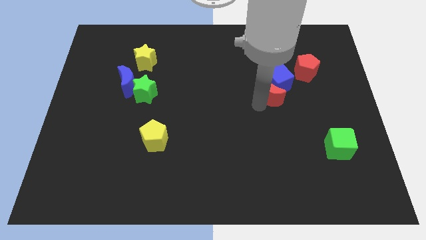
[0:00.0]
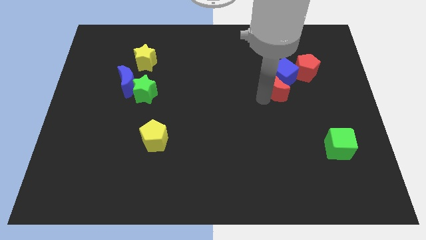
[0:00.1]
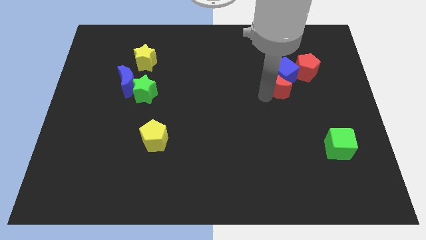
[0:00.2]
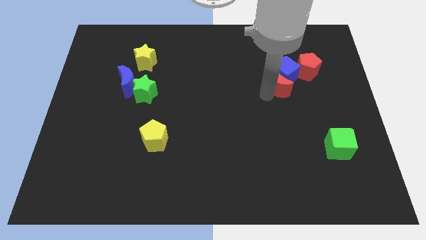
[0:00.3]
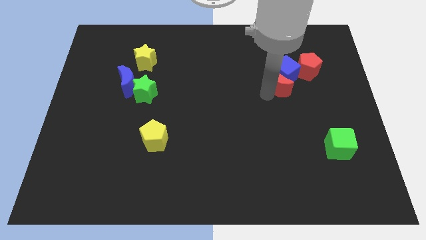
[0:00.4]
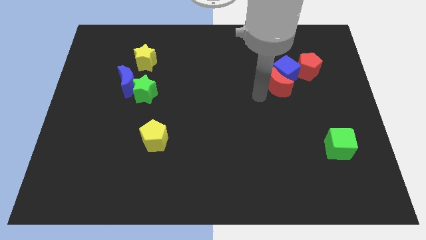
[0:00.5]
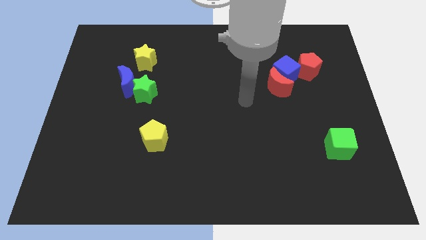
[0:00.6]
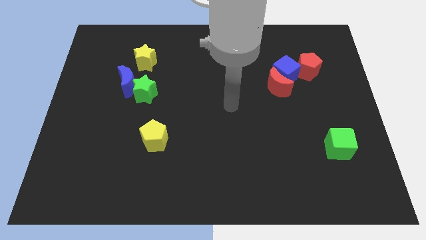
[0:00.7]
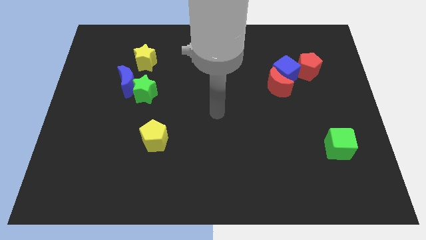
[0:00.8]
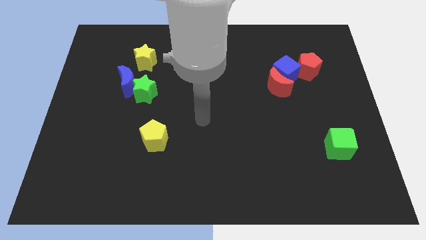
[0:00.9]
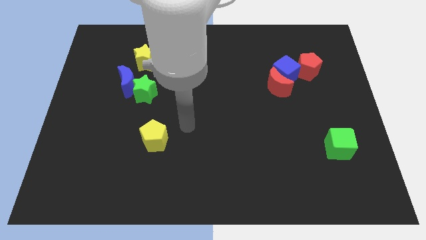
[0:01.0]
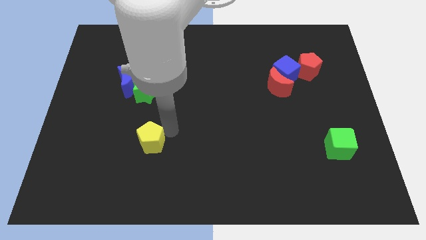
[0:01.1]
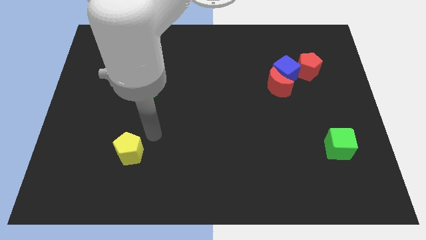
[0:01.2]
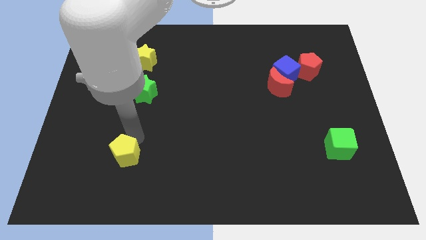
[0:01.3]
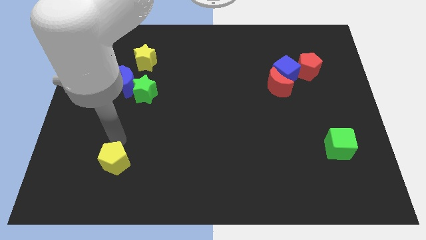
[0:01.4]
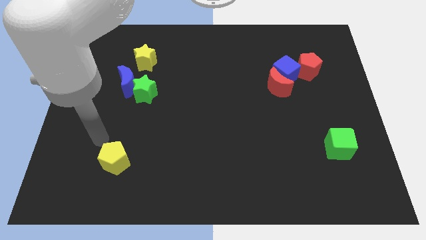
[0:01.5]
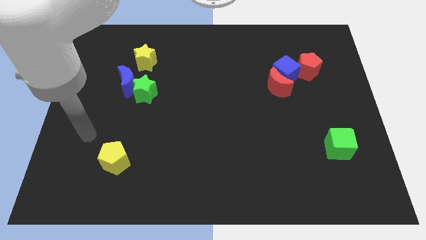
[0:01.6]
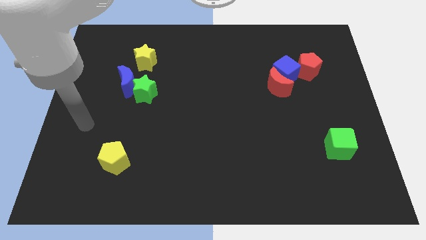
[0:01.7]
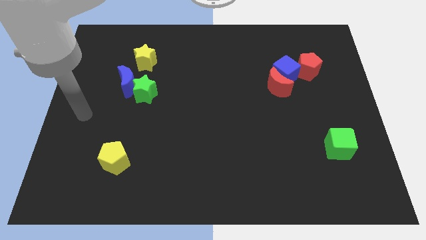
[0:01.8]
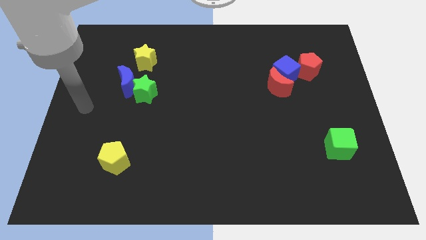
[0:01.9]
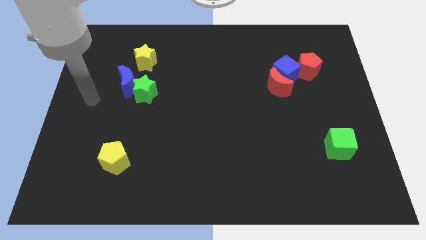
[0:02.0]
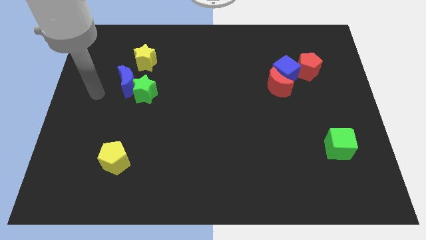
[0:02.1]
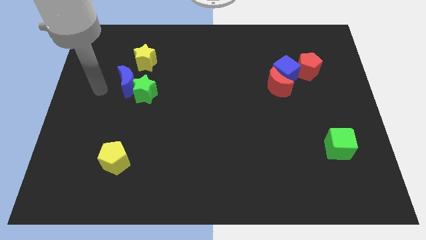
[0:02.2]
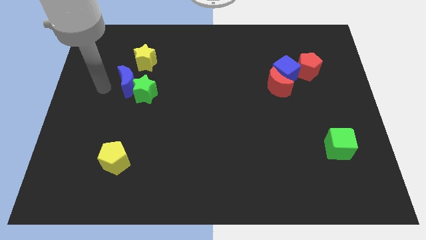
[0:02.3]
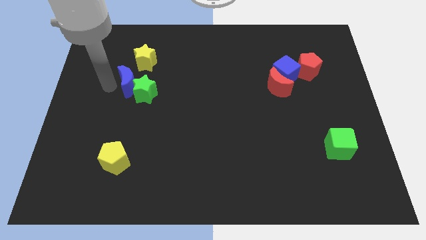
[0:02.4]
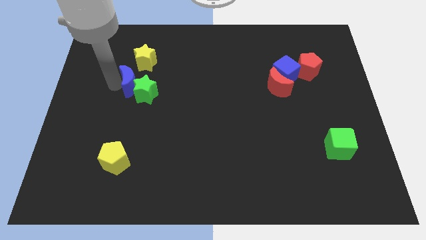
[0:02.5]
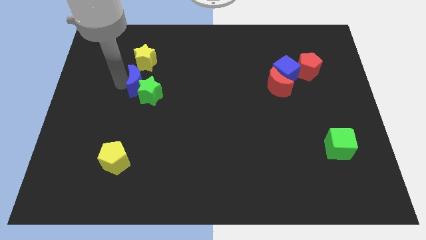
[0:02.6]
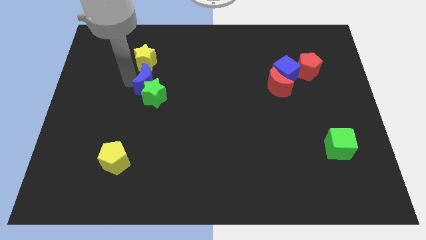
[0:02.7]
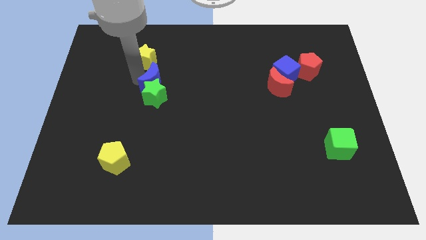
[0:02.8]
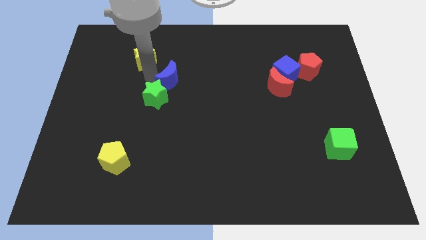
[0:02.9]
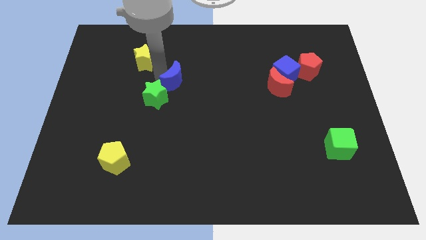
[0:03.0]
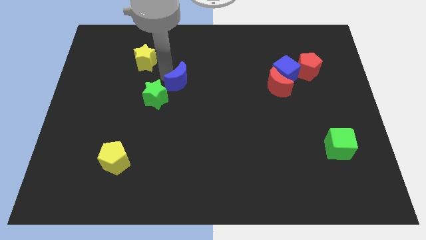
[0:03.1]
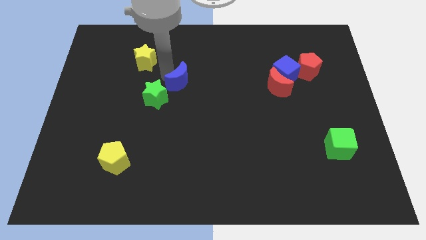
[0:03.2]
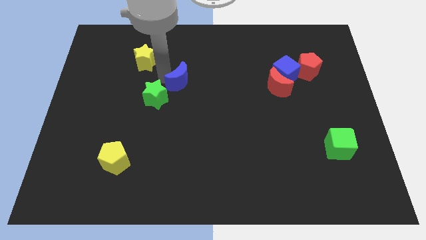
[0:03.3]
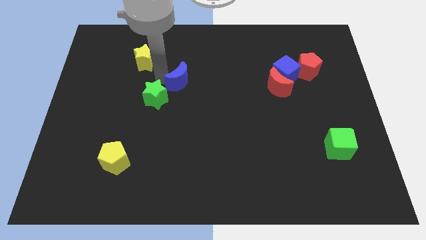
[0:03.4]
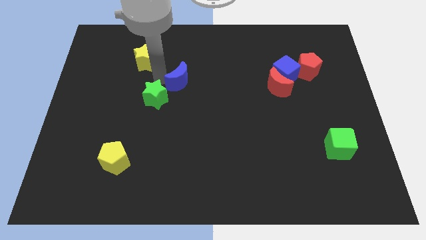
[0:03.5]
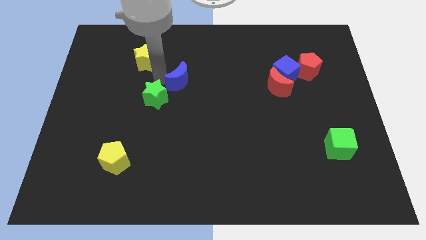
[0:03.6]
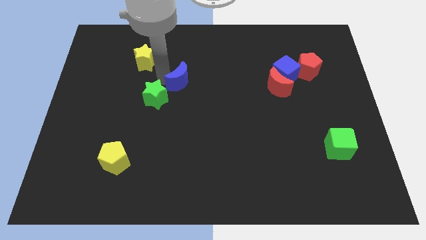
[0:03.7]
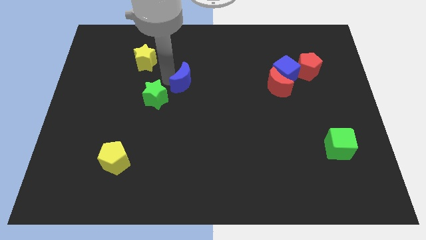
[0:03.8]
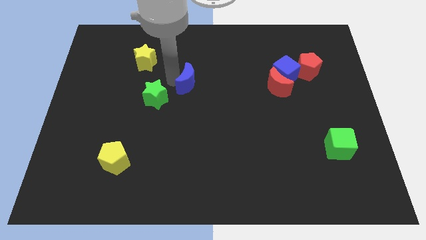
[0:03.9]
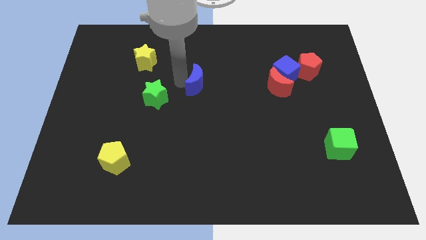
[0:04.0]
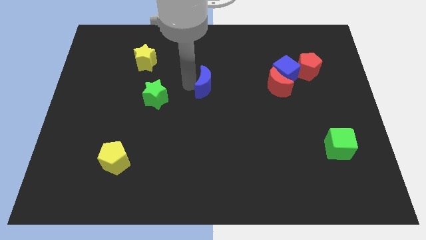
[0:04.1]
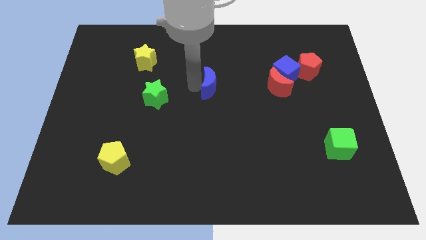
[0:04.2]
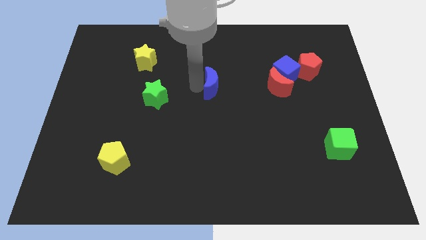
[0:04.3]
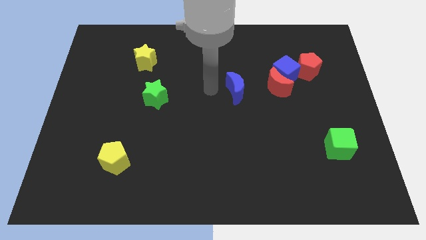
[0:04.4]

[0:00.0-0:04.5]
place the blue crescent in between green star and red crescent

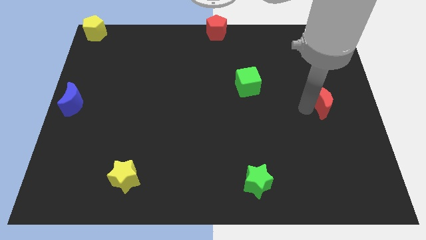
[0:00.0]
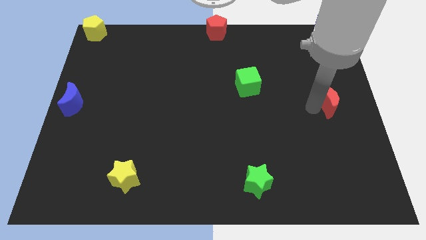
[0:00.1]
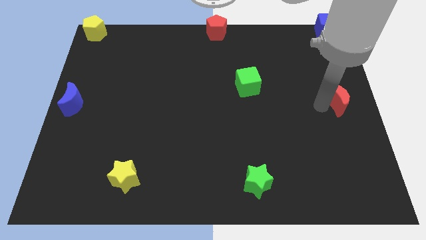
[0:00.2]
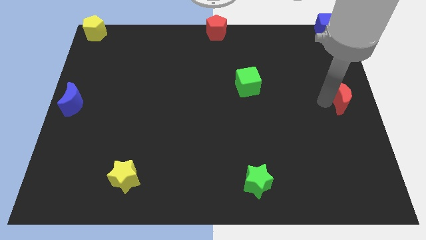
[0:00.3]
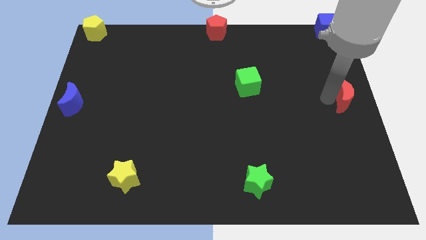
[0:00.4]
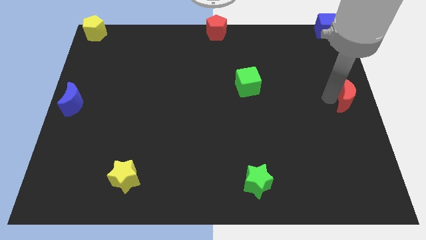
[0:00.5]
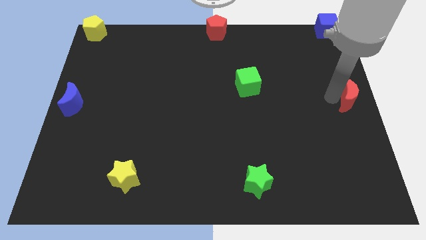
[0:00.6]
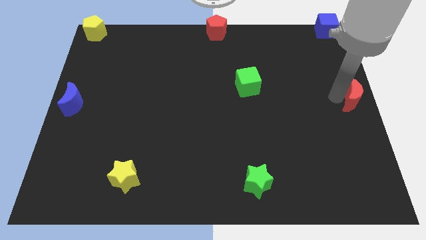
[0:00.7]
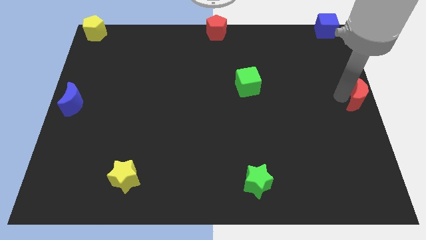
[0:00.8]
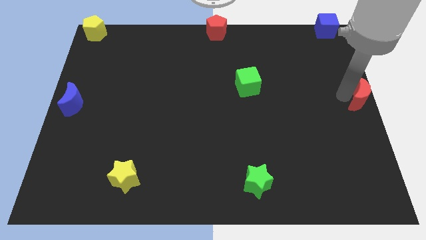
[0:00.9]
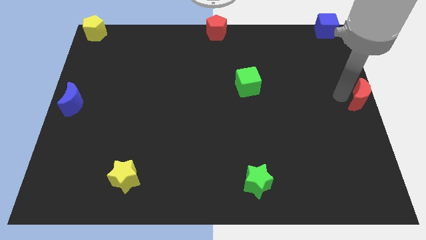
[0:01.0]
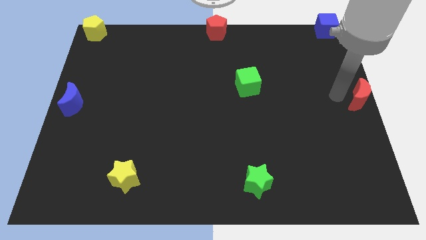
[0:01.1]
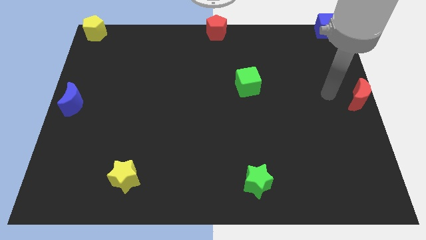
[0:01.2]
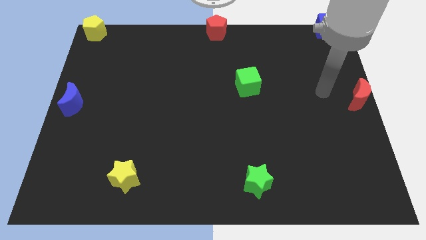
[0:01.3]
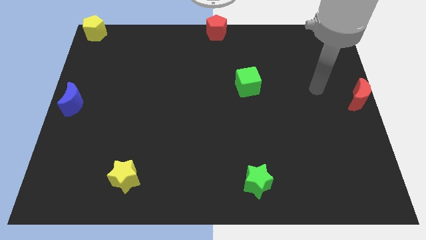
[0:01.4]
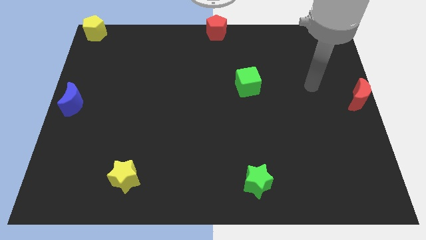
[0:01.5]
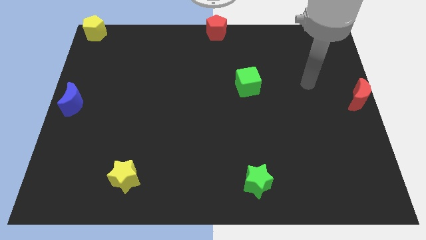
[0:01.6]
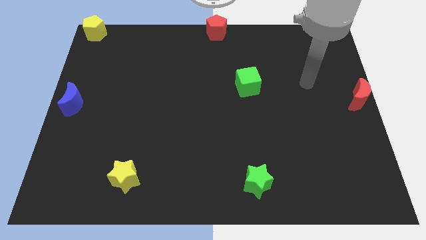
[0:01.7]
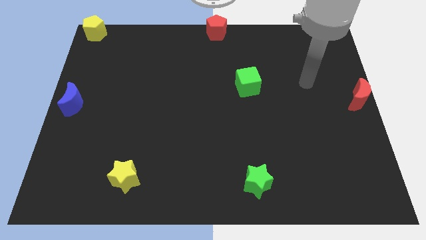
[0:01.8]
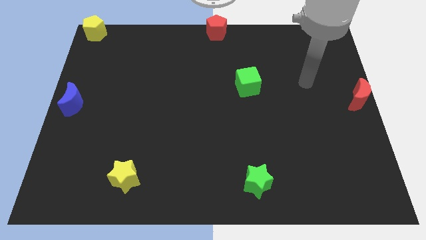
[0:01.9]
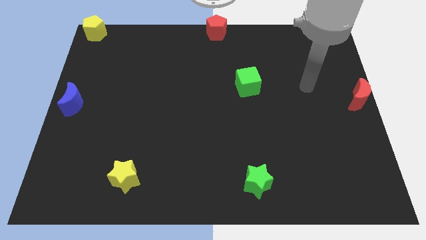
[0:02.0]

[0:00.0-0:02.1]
place red moon to the center right

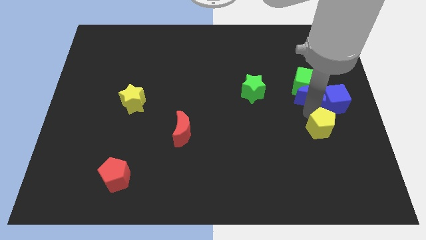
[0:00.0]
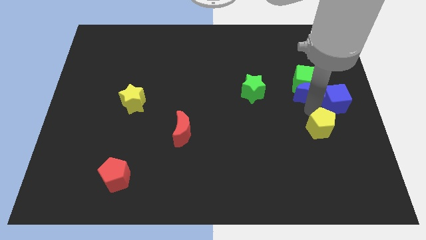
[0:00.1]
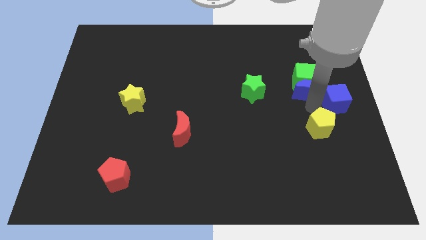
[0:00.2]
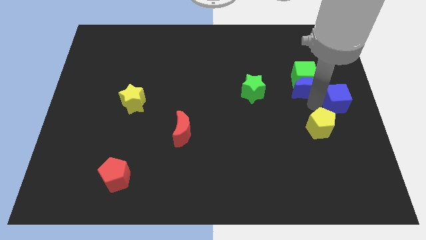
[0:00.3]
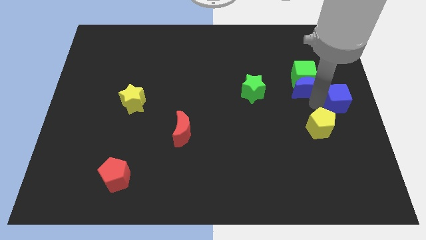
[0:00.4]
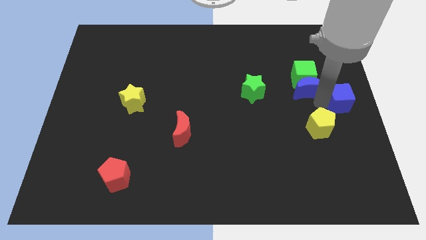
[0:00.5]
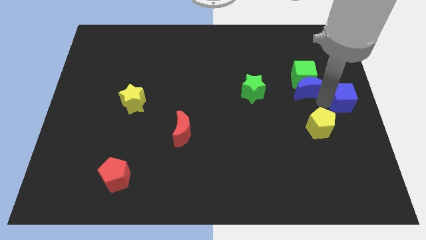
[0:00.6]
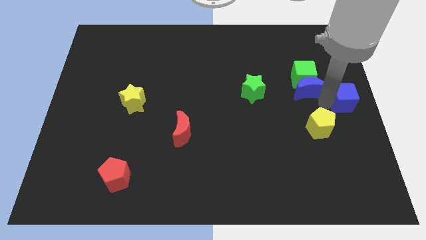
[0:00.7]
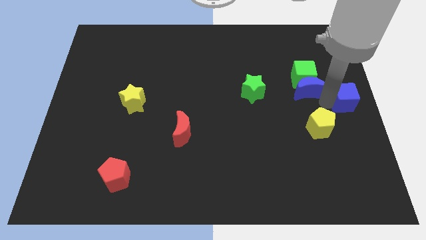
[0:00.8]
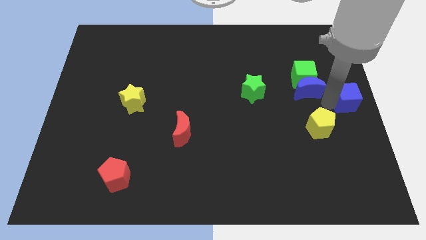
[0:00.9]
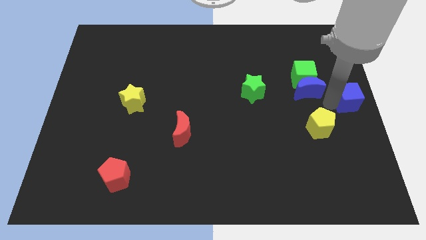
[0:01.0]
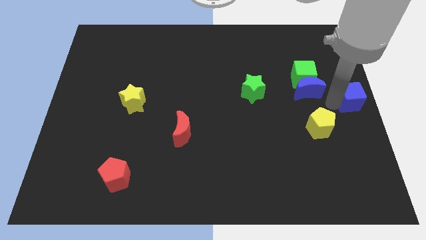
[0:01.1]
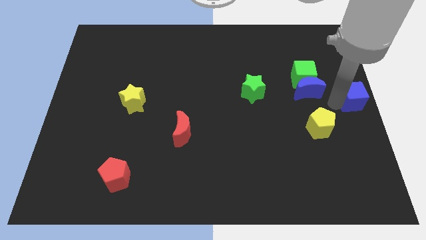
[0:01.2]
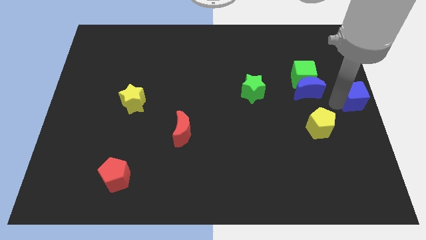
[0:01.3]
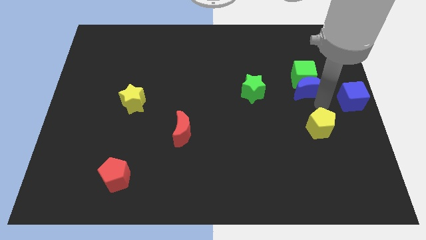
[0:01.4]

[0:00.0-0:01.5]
move the blue cube slightly to the right

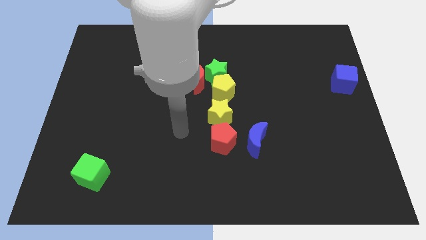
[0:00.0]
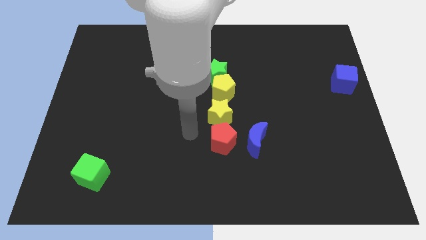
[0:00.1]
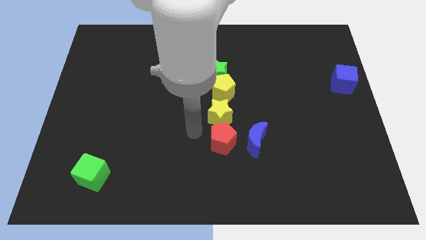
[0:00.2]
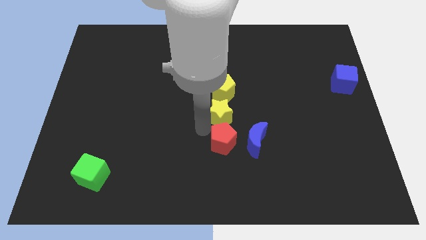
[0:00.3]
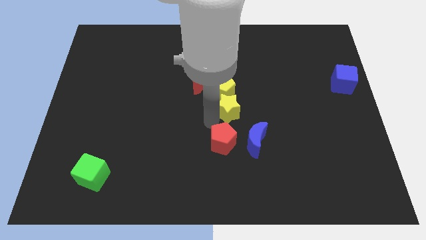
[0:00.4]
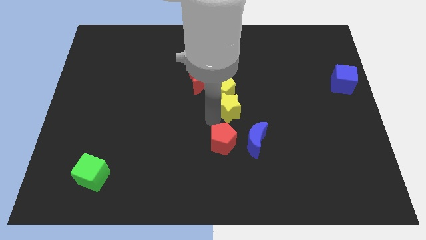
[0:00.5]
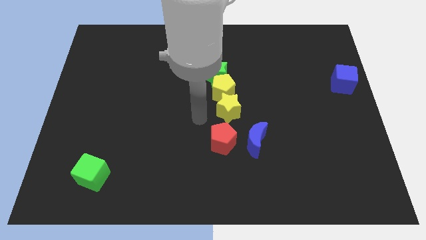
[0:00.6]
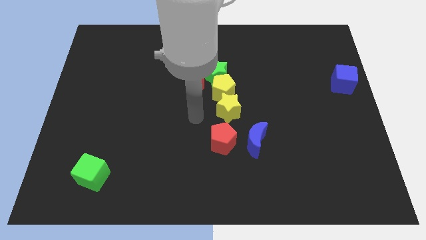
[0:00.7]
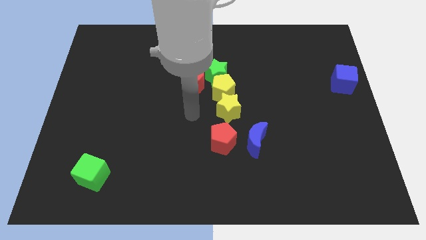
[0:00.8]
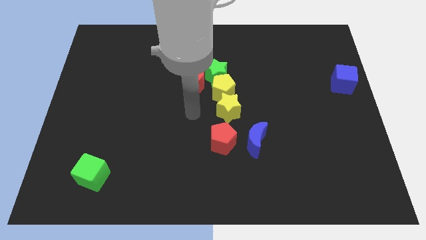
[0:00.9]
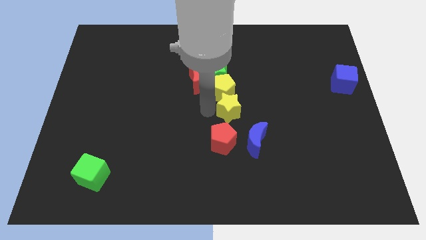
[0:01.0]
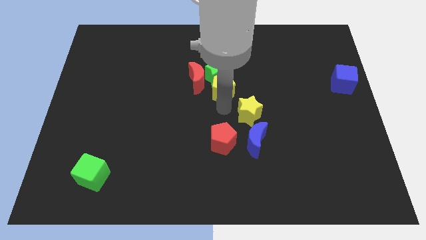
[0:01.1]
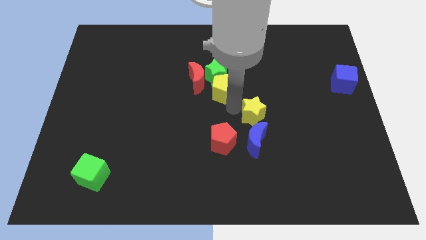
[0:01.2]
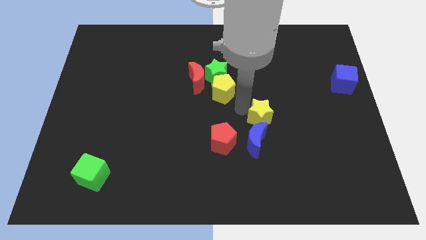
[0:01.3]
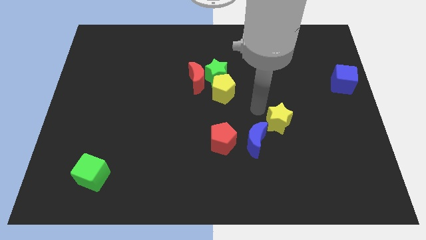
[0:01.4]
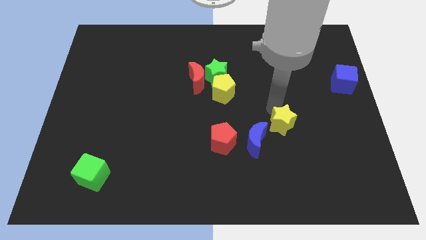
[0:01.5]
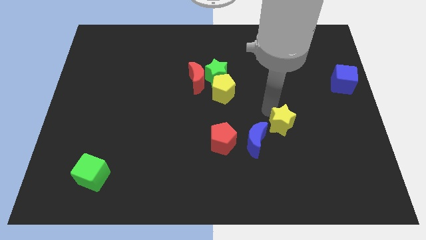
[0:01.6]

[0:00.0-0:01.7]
move the yellow star away from the bottom side of the yellow pentagon
